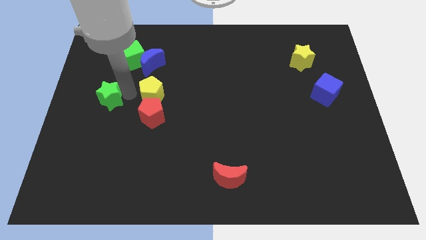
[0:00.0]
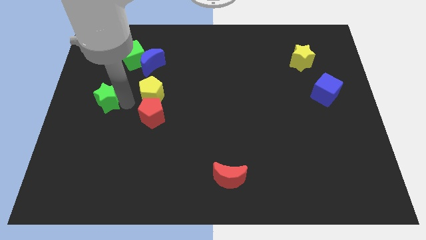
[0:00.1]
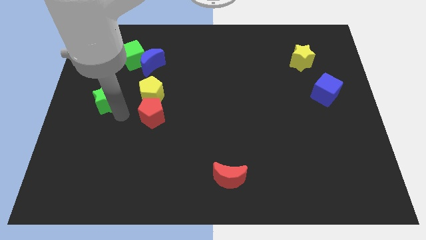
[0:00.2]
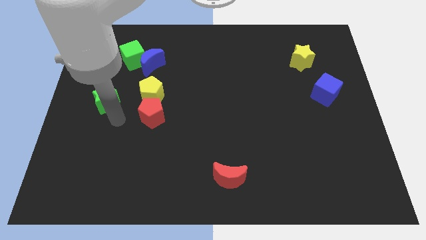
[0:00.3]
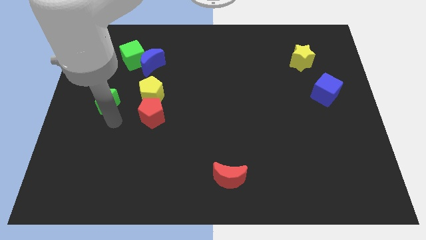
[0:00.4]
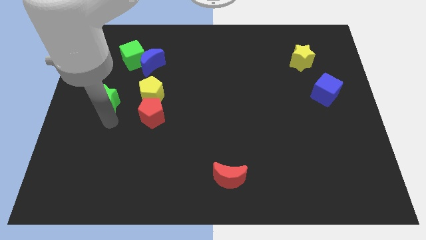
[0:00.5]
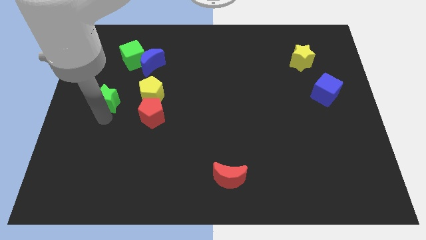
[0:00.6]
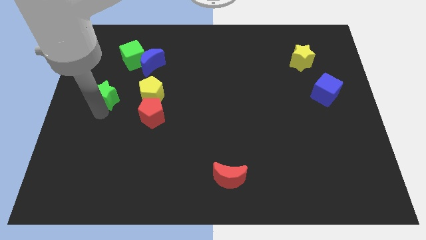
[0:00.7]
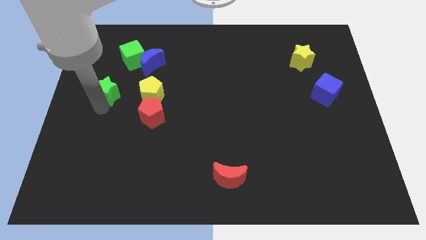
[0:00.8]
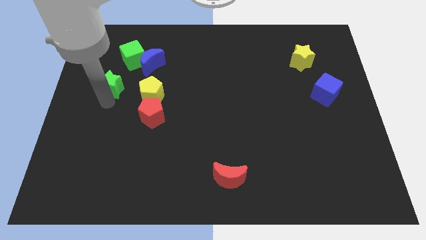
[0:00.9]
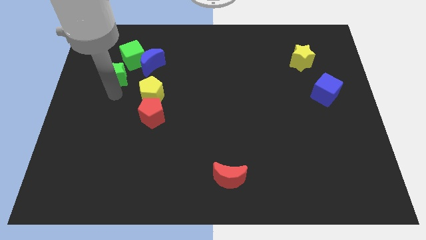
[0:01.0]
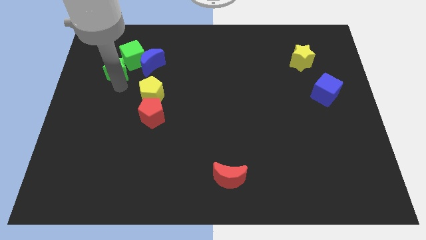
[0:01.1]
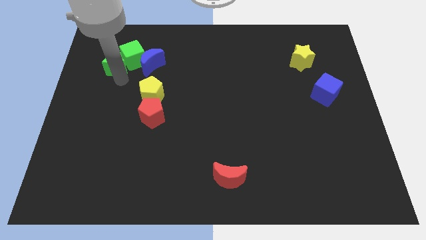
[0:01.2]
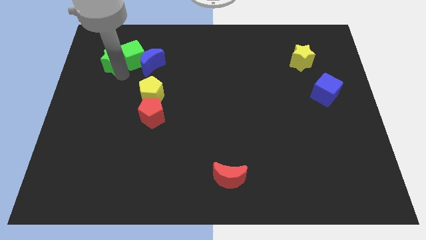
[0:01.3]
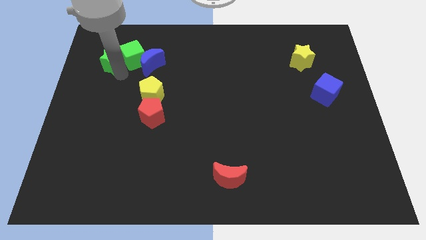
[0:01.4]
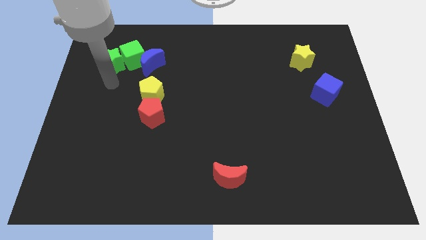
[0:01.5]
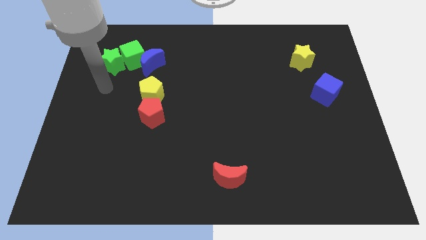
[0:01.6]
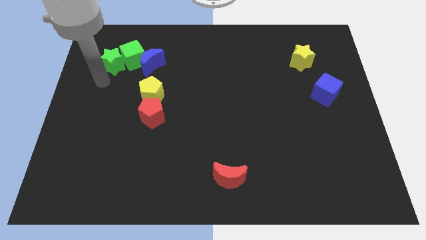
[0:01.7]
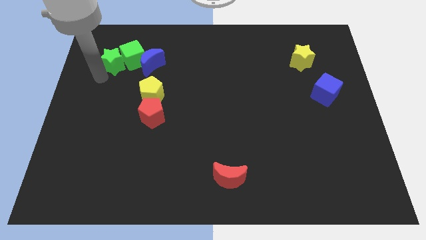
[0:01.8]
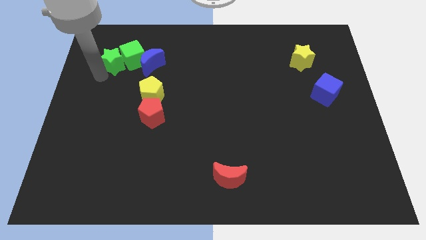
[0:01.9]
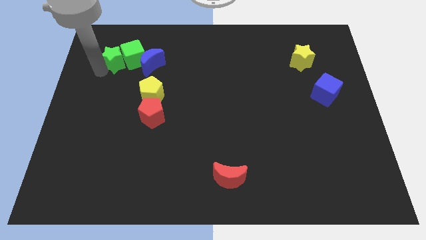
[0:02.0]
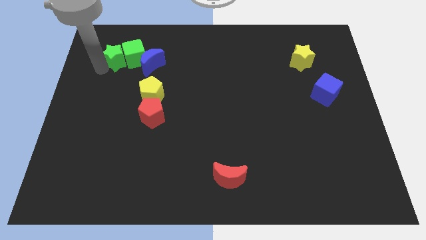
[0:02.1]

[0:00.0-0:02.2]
place the green star left to the green cube

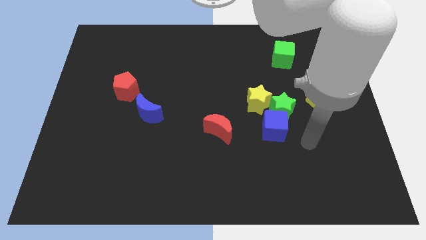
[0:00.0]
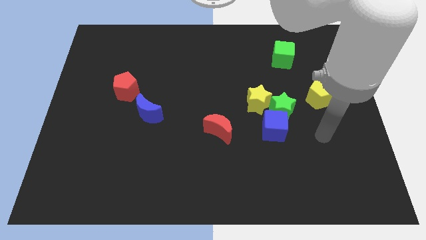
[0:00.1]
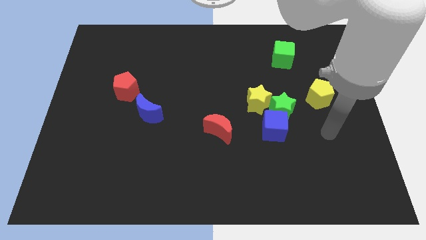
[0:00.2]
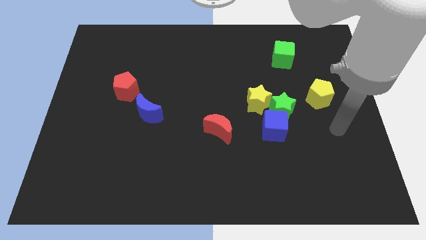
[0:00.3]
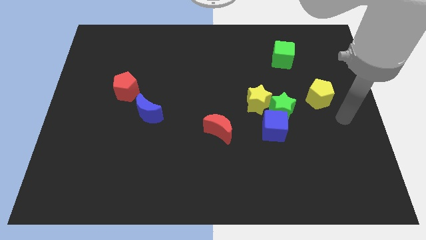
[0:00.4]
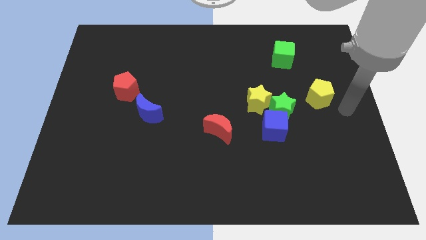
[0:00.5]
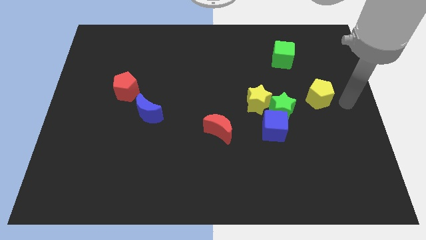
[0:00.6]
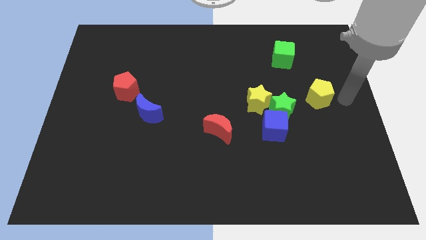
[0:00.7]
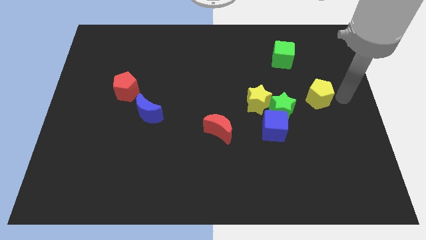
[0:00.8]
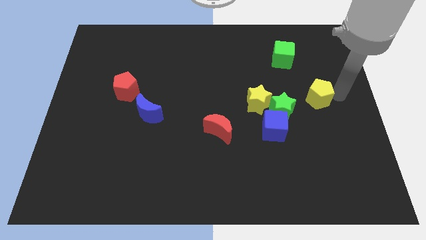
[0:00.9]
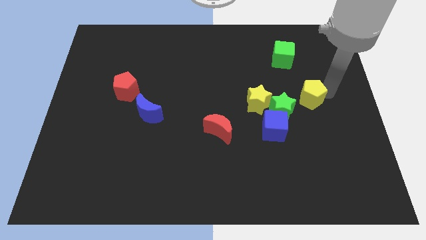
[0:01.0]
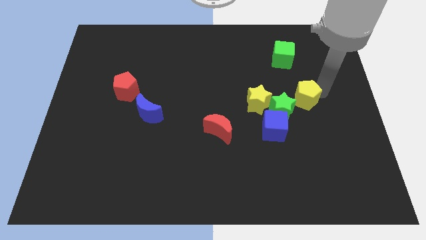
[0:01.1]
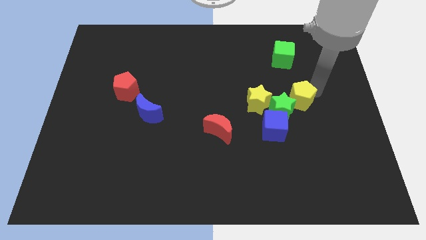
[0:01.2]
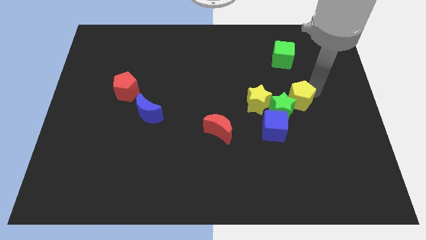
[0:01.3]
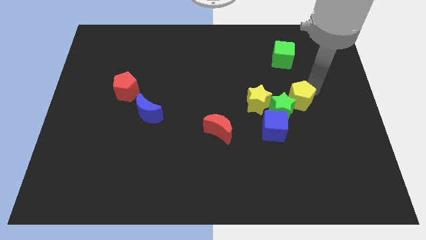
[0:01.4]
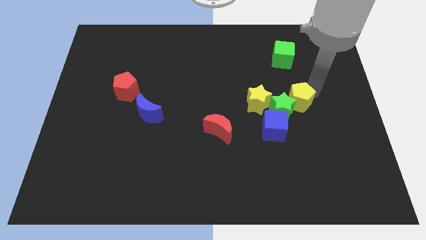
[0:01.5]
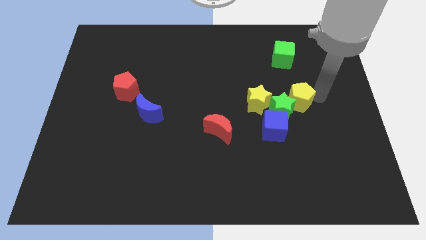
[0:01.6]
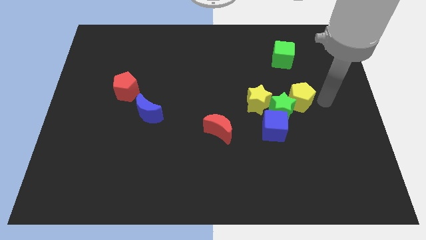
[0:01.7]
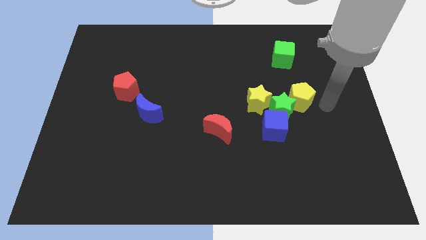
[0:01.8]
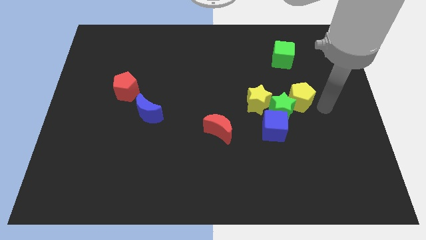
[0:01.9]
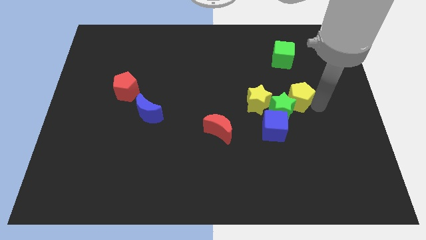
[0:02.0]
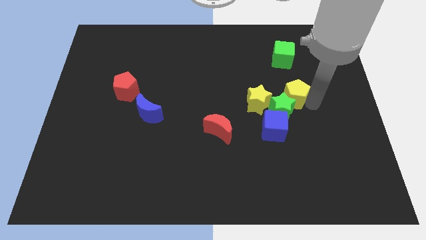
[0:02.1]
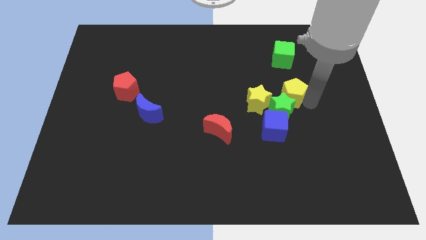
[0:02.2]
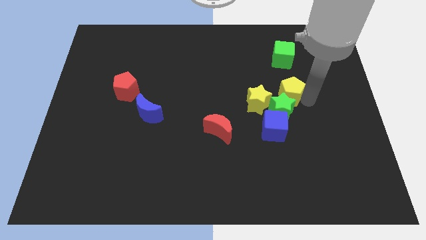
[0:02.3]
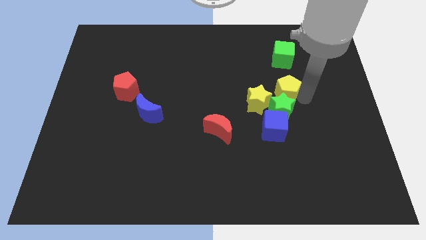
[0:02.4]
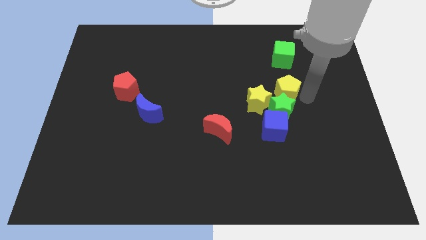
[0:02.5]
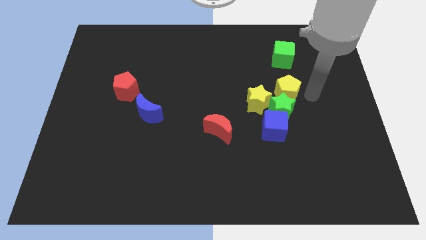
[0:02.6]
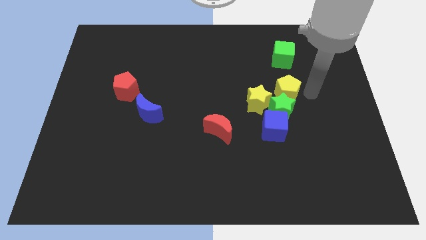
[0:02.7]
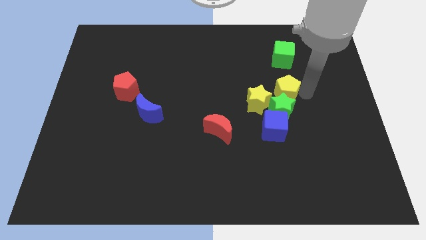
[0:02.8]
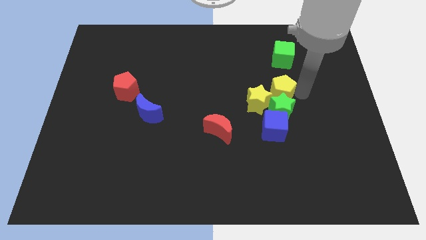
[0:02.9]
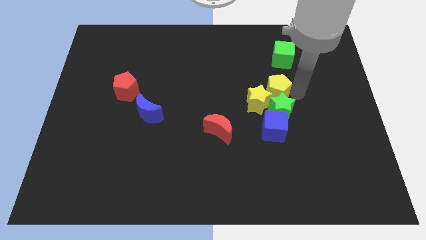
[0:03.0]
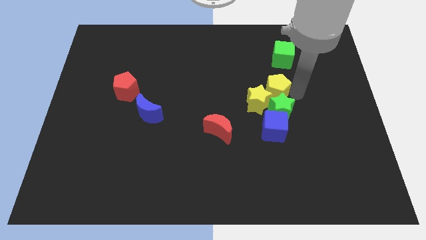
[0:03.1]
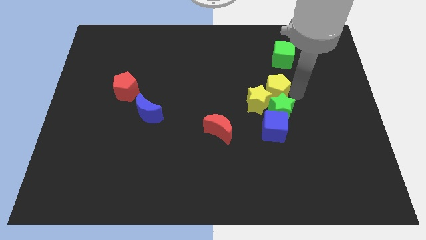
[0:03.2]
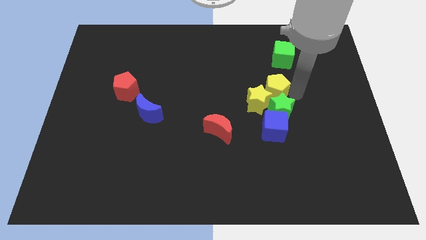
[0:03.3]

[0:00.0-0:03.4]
place the yellow pentagon on top of green star

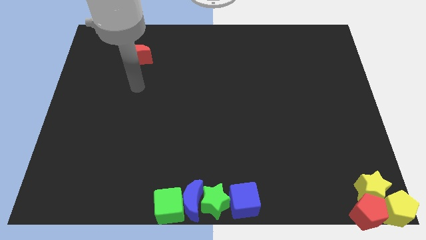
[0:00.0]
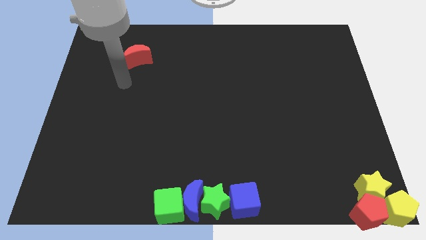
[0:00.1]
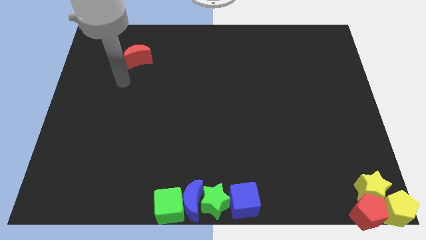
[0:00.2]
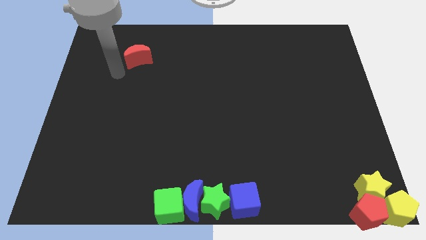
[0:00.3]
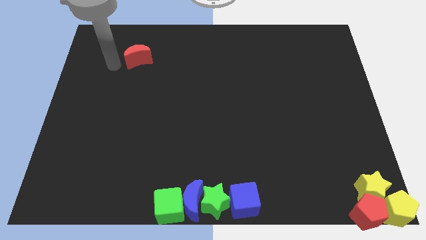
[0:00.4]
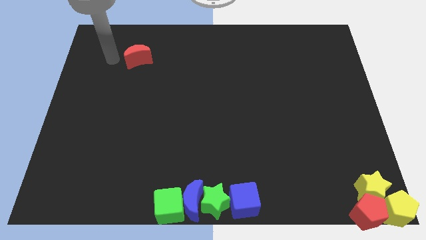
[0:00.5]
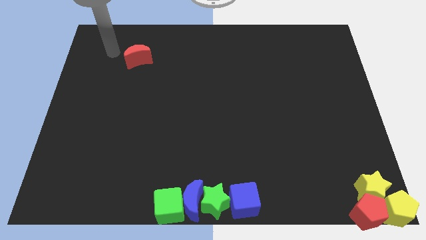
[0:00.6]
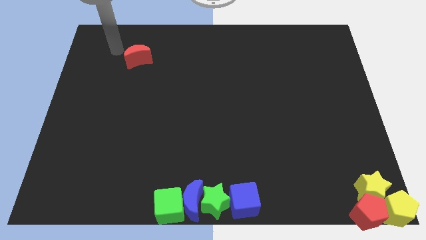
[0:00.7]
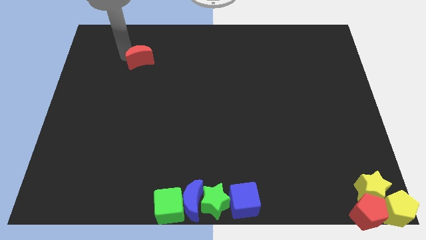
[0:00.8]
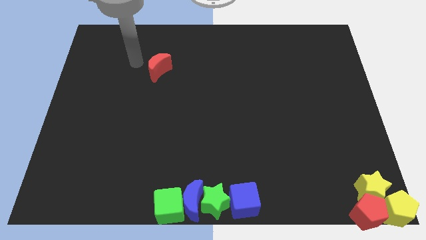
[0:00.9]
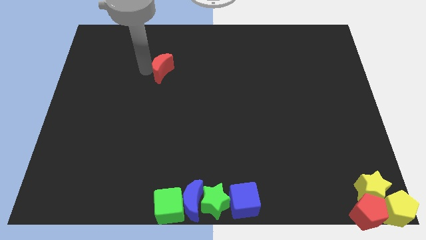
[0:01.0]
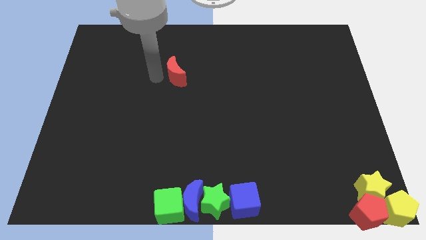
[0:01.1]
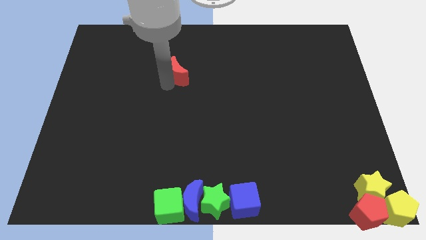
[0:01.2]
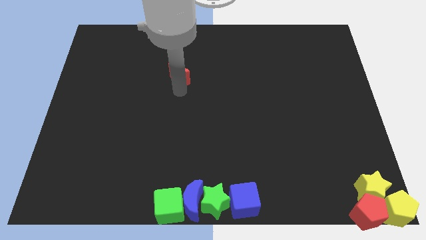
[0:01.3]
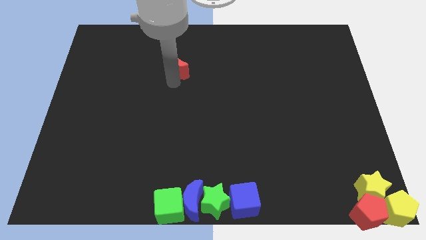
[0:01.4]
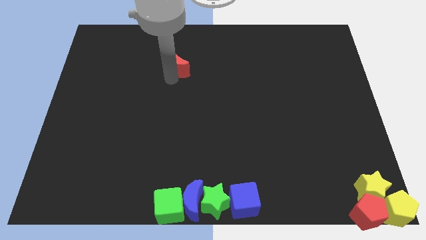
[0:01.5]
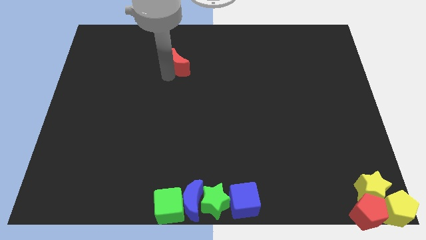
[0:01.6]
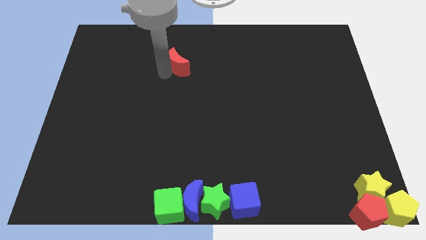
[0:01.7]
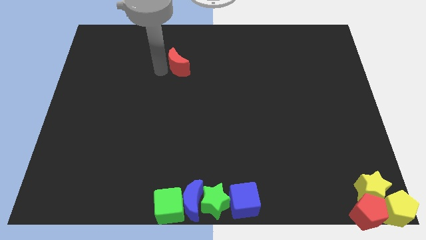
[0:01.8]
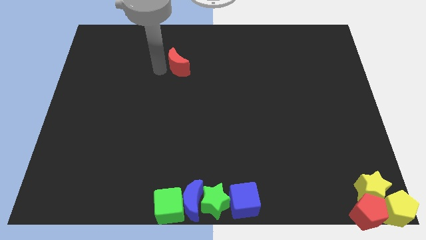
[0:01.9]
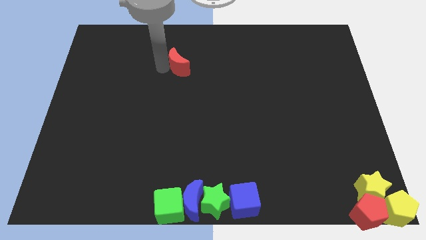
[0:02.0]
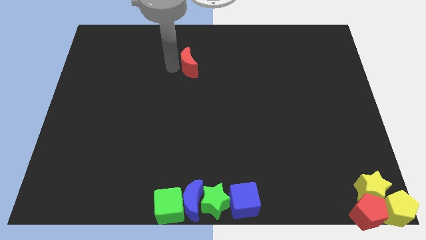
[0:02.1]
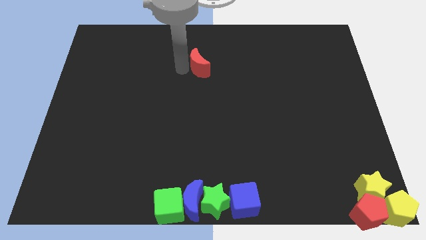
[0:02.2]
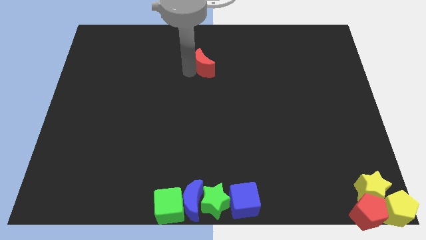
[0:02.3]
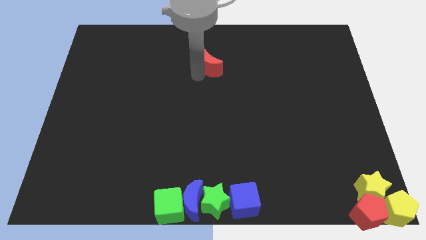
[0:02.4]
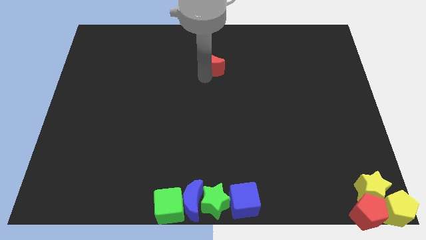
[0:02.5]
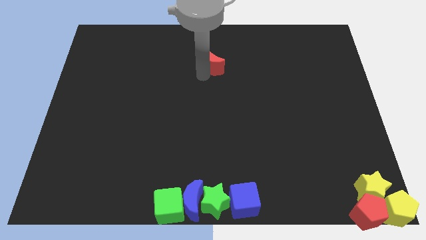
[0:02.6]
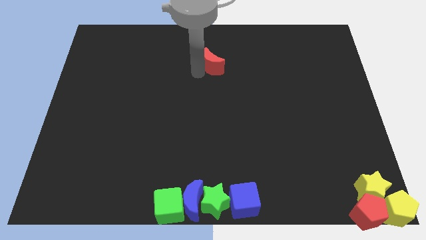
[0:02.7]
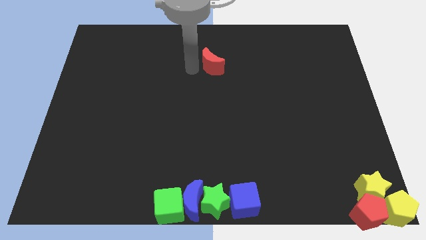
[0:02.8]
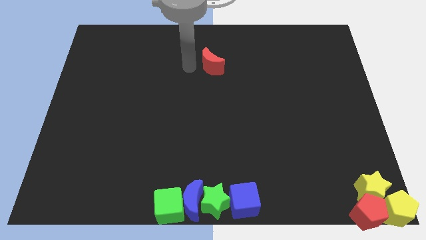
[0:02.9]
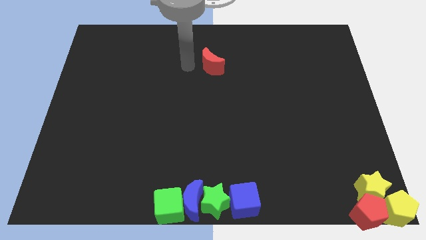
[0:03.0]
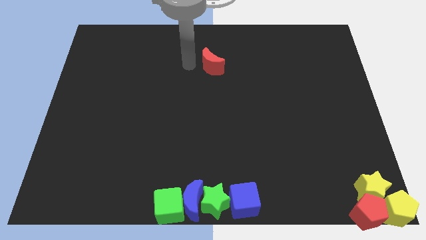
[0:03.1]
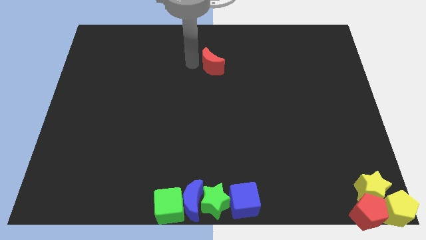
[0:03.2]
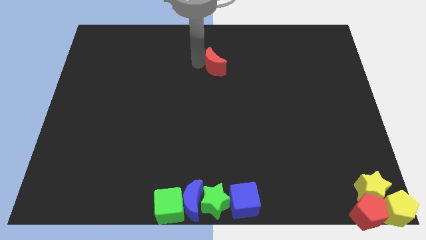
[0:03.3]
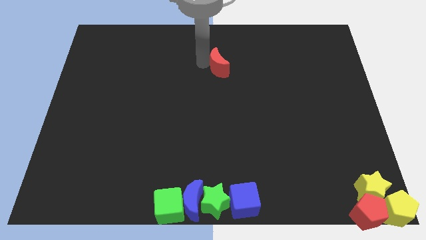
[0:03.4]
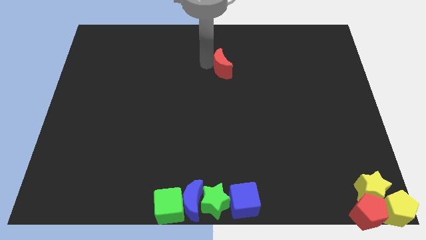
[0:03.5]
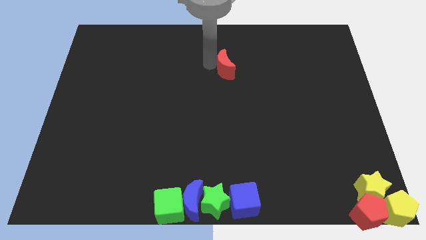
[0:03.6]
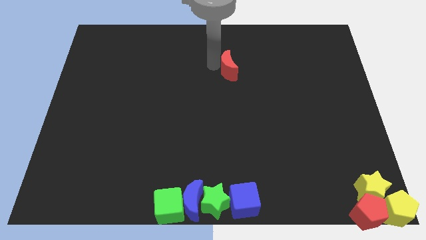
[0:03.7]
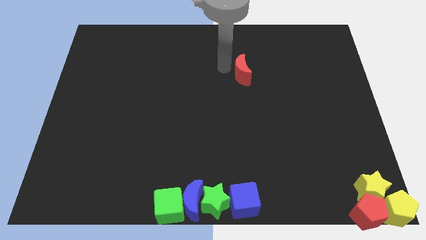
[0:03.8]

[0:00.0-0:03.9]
move the red crescent vertically above to the blue cube
